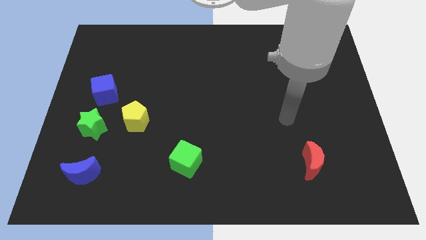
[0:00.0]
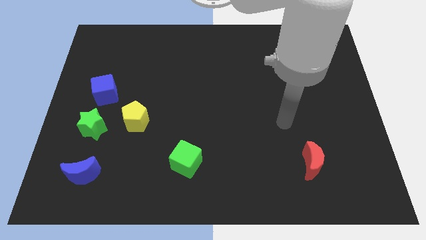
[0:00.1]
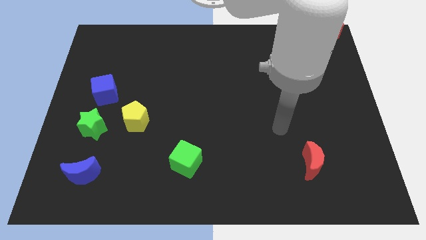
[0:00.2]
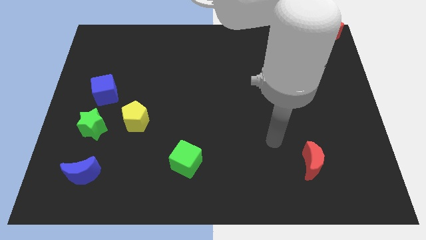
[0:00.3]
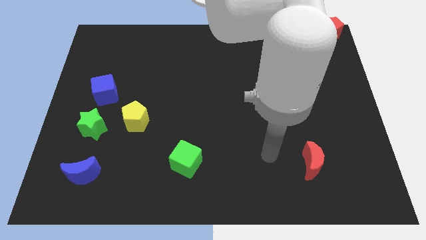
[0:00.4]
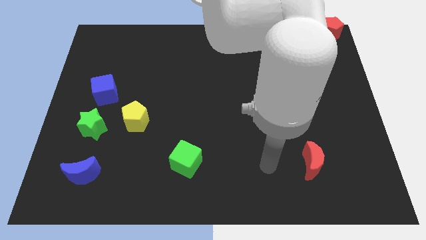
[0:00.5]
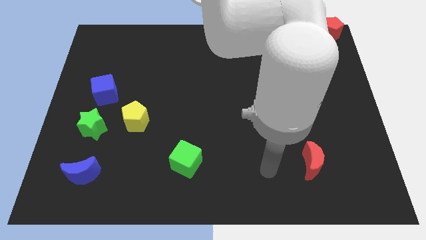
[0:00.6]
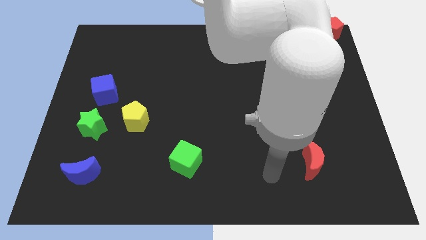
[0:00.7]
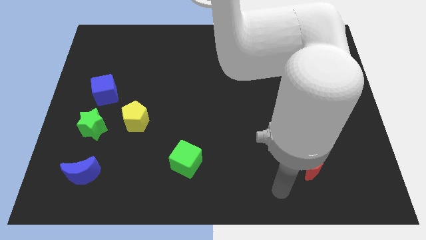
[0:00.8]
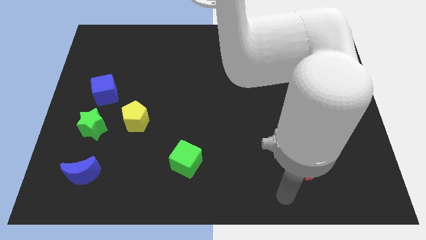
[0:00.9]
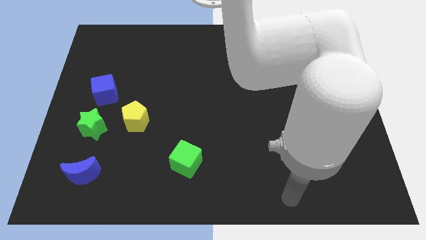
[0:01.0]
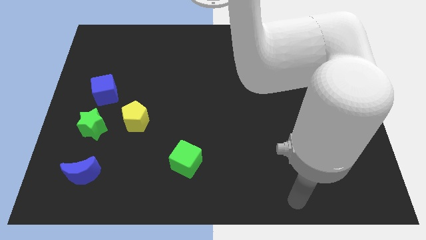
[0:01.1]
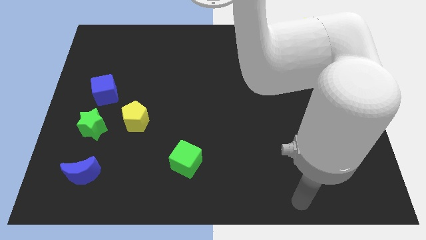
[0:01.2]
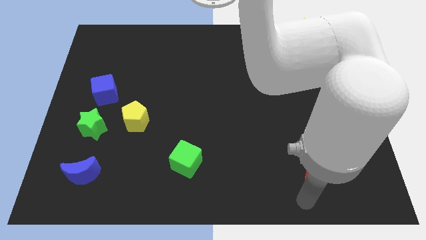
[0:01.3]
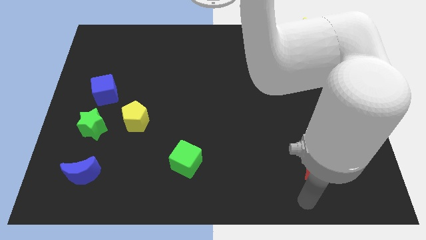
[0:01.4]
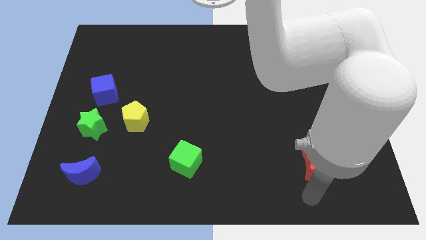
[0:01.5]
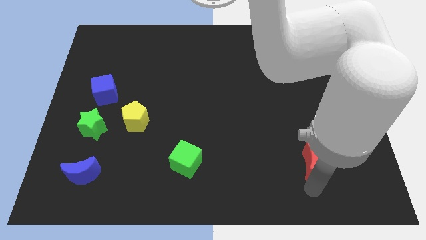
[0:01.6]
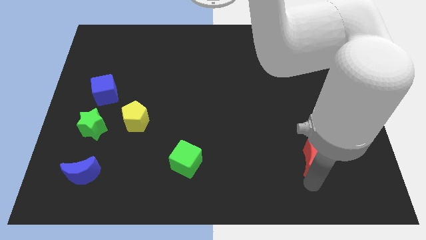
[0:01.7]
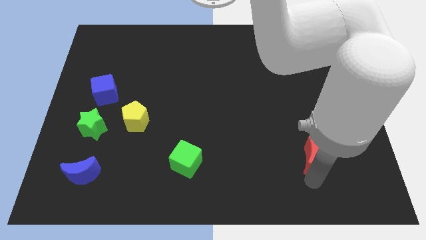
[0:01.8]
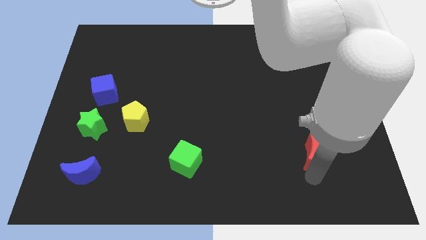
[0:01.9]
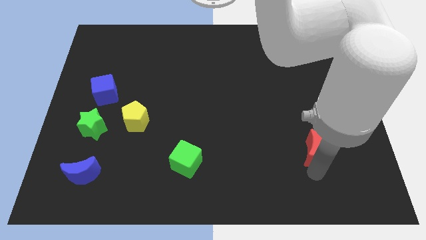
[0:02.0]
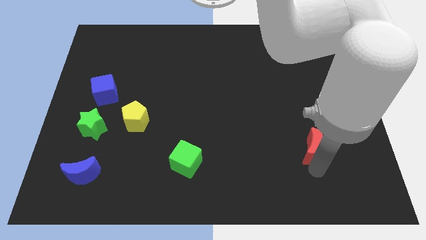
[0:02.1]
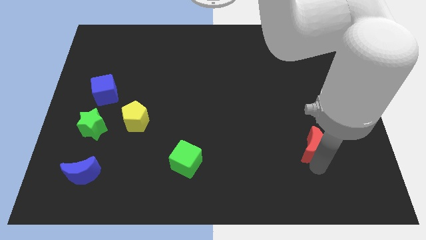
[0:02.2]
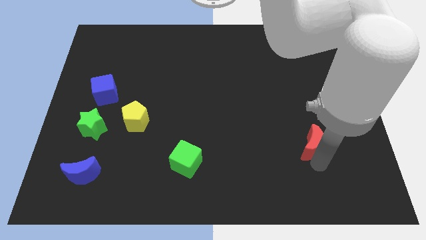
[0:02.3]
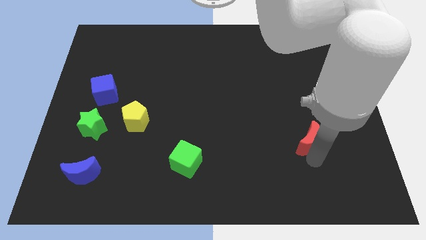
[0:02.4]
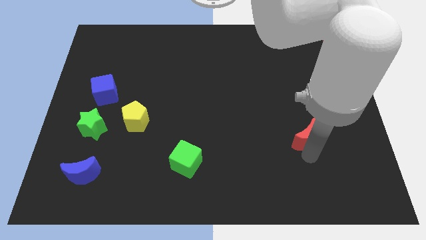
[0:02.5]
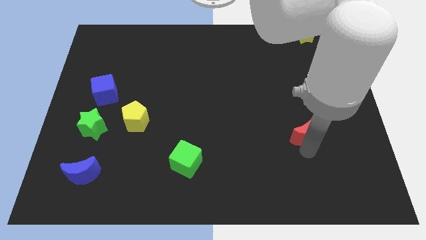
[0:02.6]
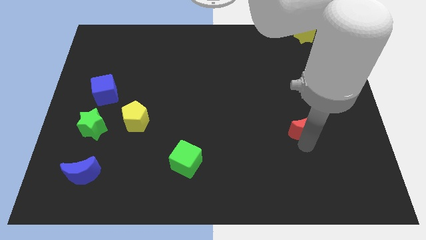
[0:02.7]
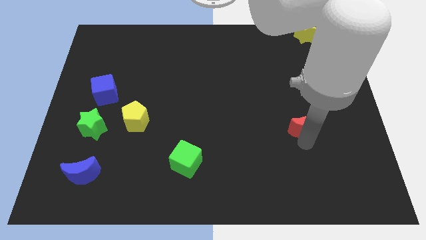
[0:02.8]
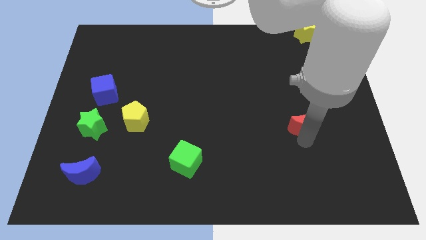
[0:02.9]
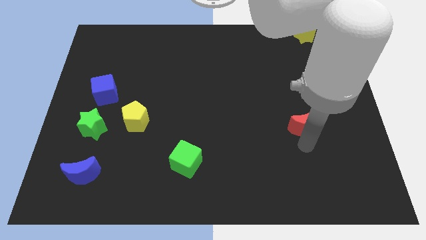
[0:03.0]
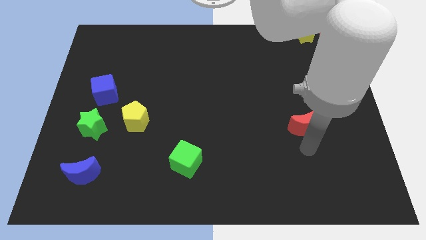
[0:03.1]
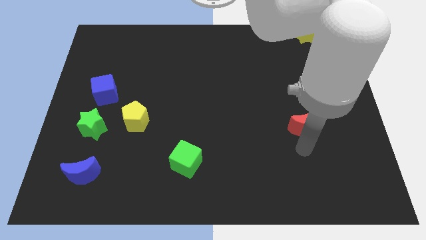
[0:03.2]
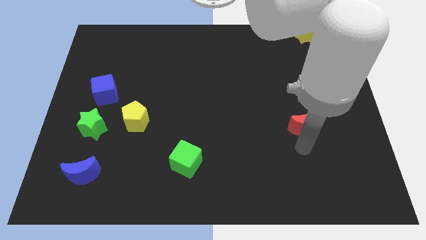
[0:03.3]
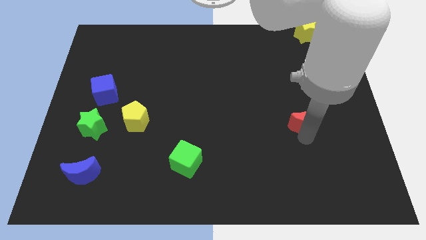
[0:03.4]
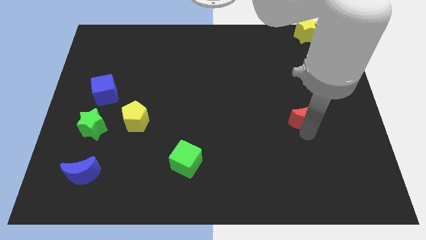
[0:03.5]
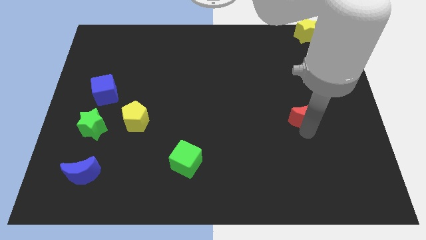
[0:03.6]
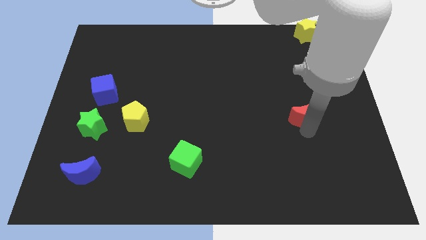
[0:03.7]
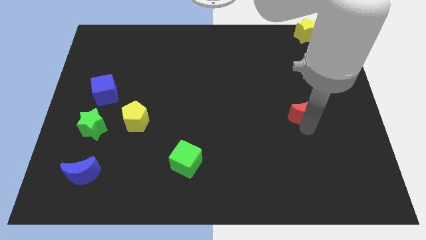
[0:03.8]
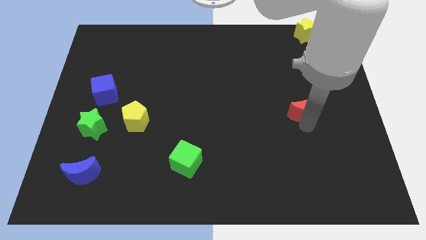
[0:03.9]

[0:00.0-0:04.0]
slightly move the red moon up

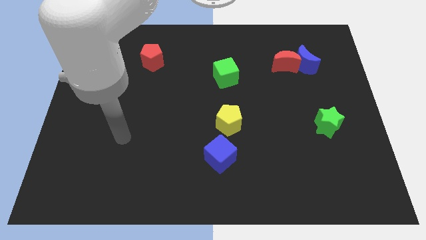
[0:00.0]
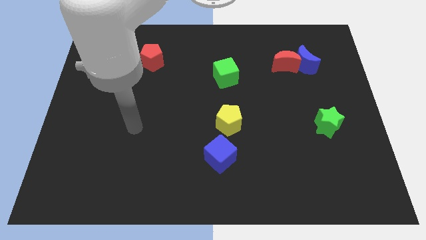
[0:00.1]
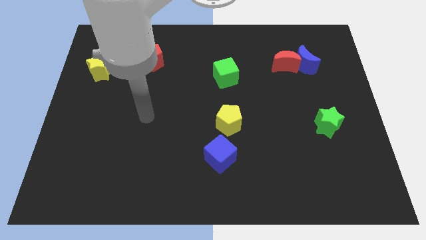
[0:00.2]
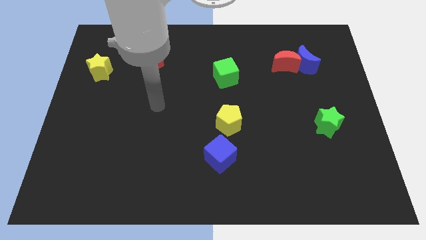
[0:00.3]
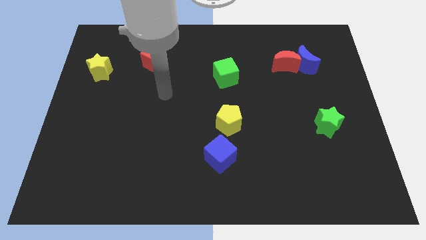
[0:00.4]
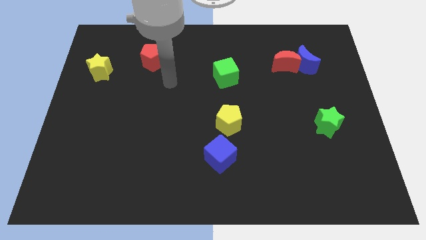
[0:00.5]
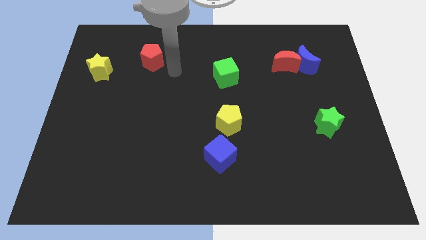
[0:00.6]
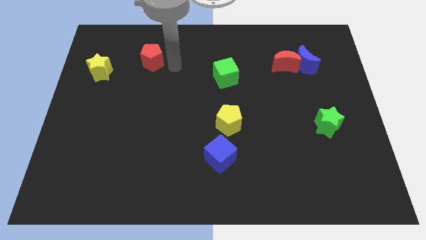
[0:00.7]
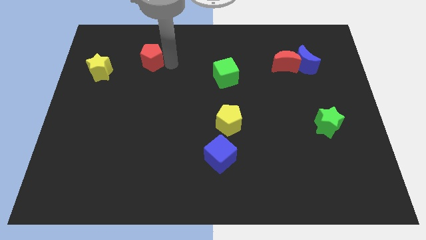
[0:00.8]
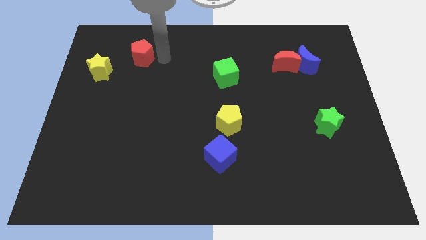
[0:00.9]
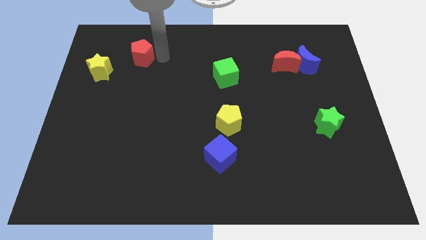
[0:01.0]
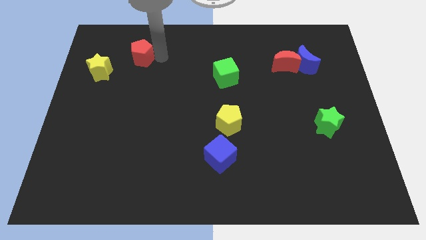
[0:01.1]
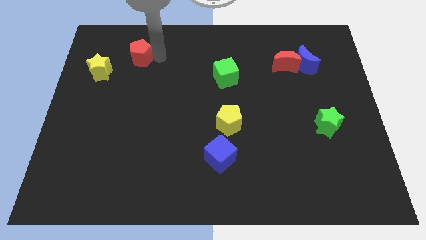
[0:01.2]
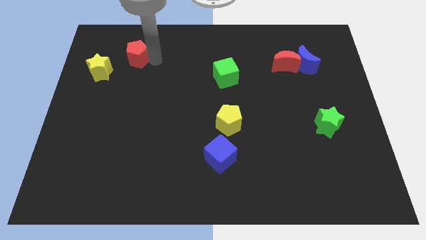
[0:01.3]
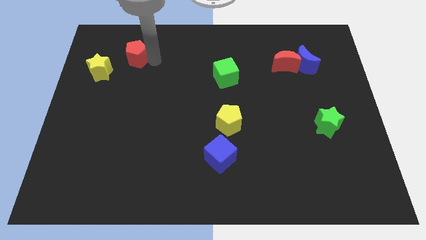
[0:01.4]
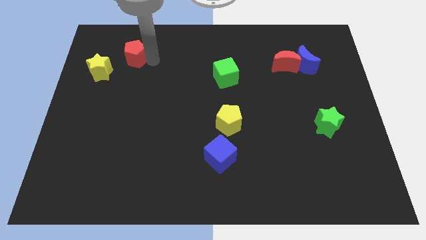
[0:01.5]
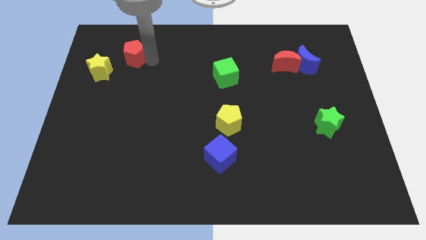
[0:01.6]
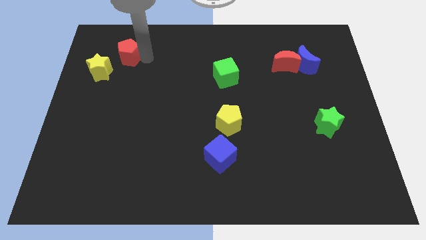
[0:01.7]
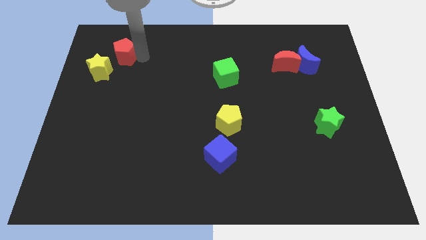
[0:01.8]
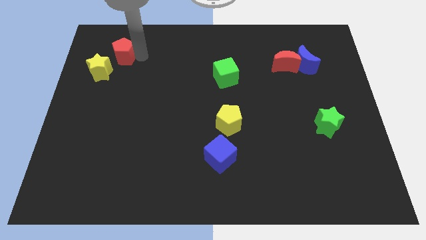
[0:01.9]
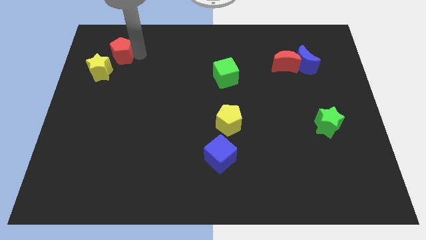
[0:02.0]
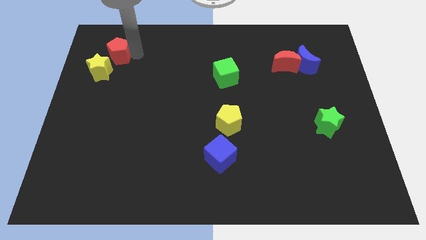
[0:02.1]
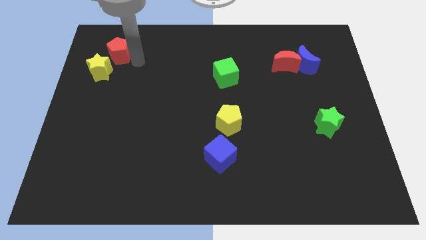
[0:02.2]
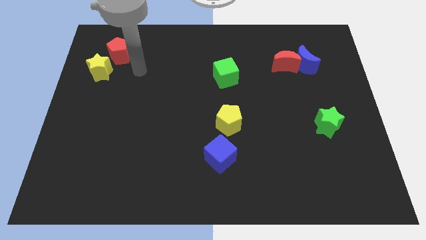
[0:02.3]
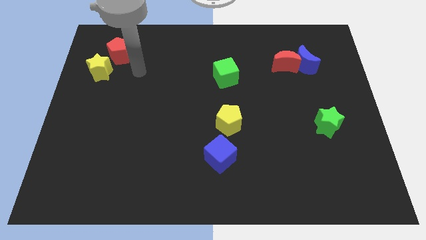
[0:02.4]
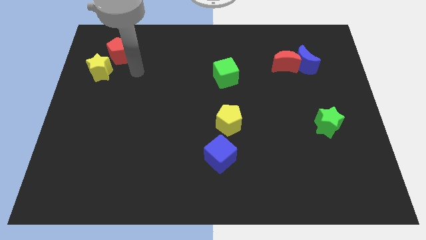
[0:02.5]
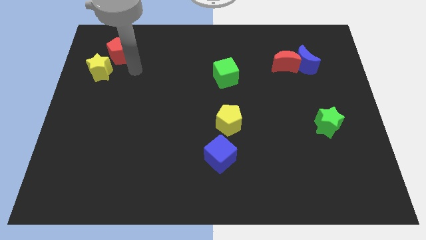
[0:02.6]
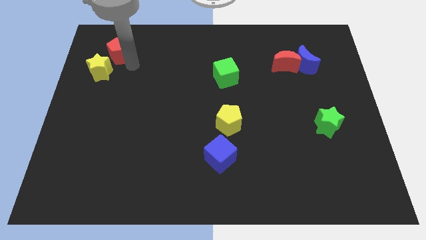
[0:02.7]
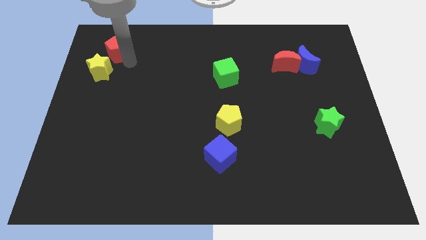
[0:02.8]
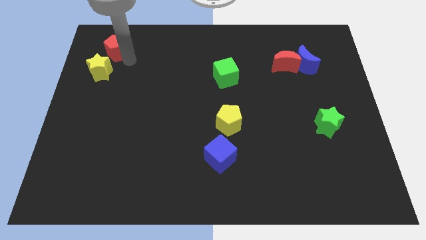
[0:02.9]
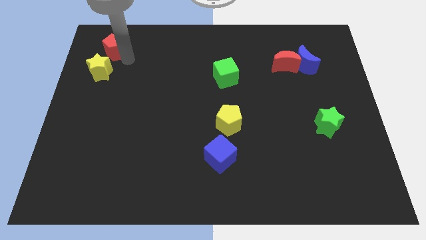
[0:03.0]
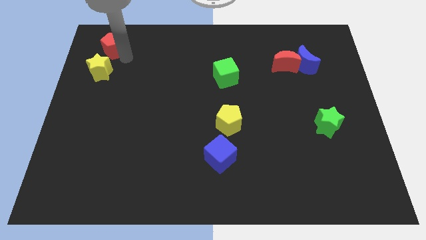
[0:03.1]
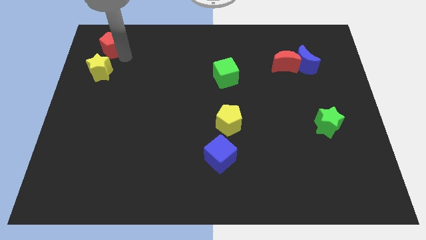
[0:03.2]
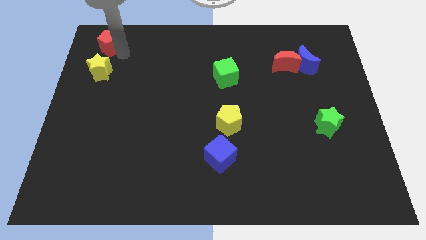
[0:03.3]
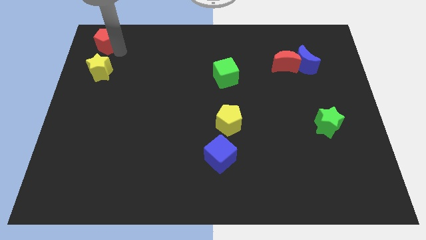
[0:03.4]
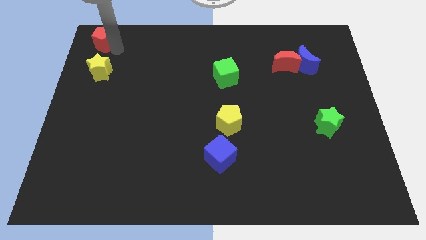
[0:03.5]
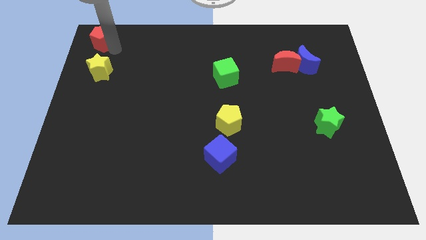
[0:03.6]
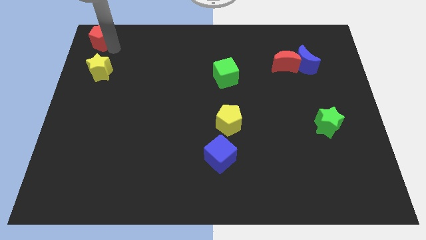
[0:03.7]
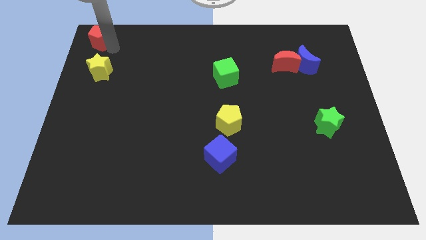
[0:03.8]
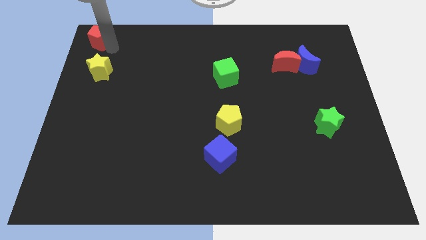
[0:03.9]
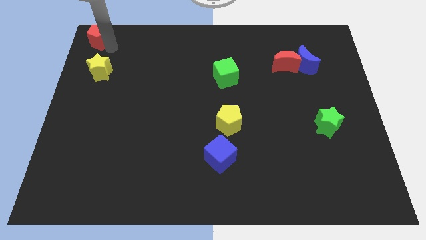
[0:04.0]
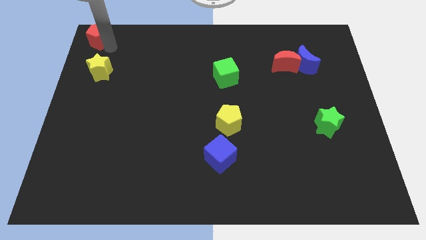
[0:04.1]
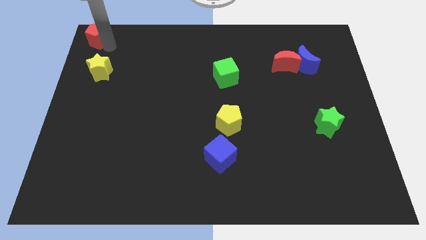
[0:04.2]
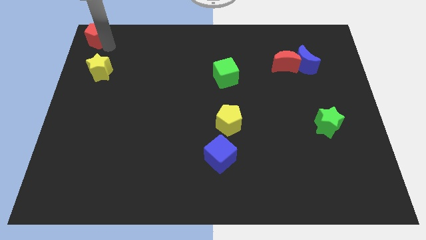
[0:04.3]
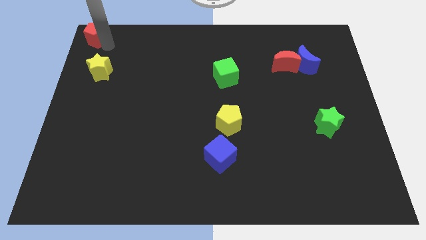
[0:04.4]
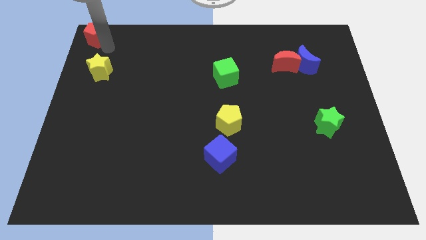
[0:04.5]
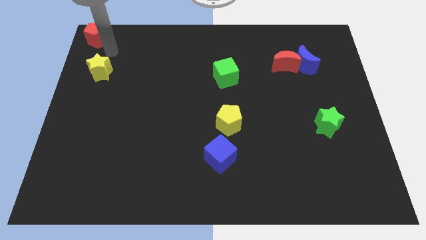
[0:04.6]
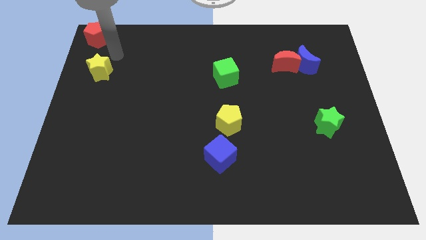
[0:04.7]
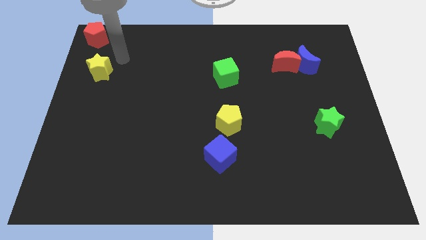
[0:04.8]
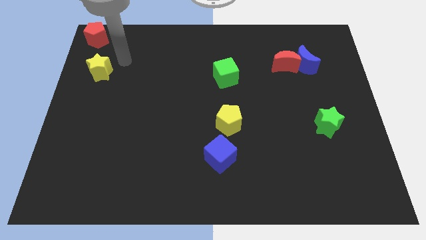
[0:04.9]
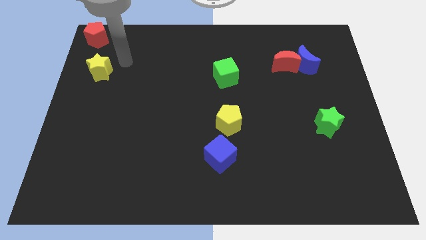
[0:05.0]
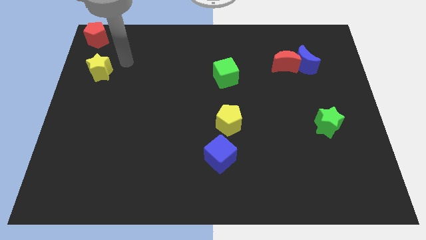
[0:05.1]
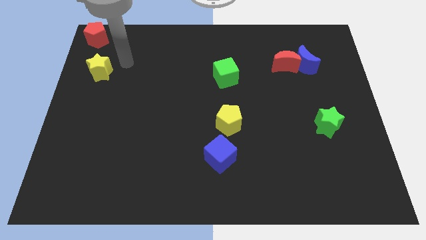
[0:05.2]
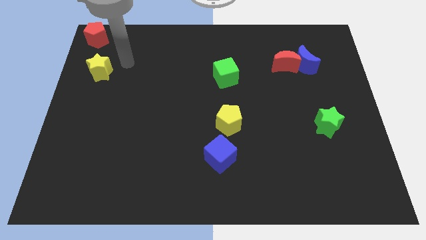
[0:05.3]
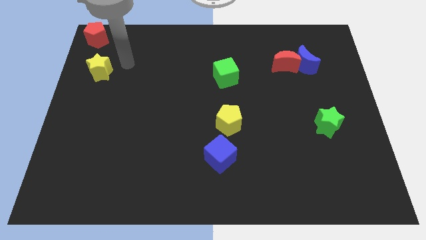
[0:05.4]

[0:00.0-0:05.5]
place the red pentagon at the top left corner of the board
